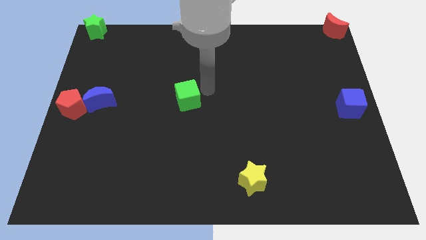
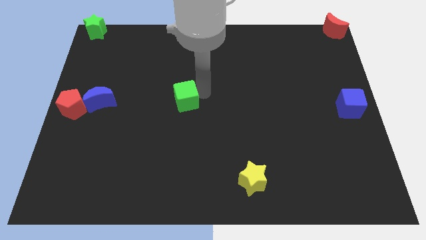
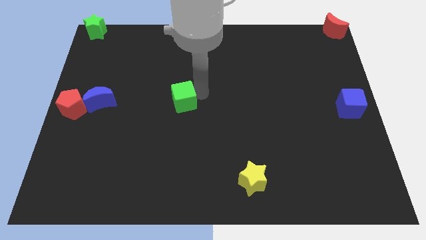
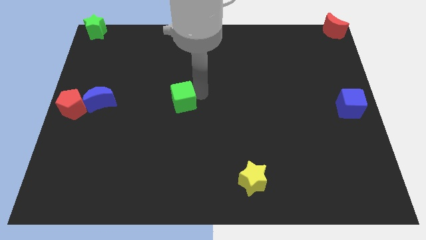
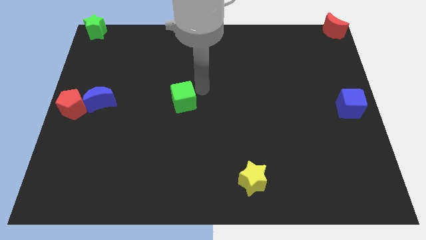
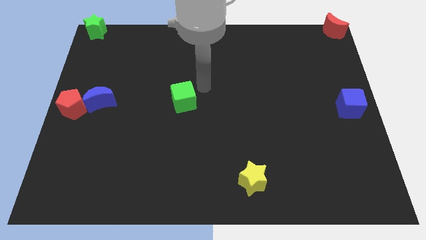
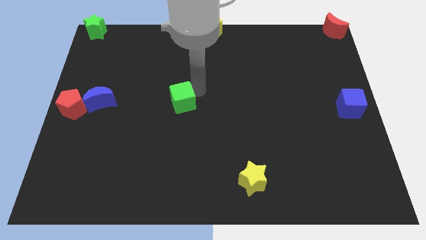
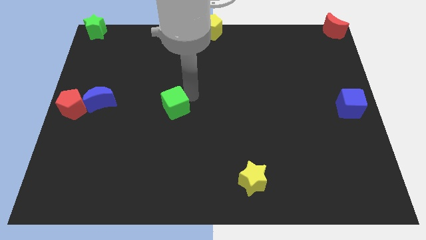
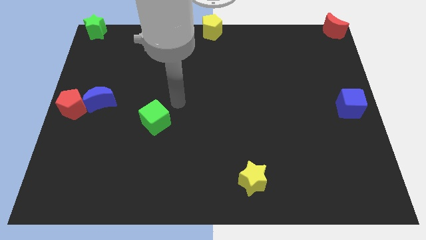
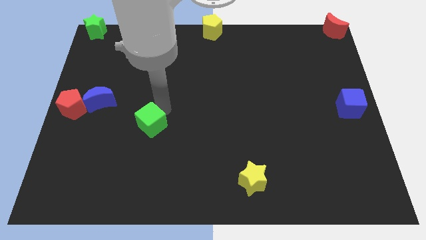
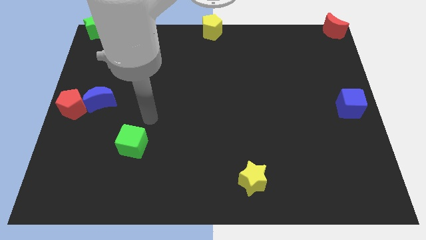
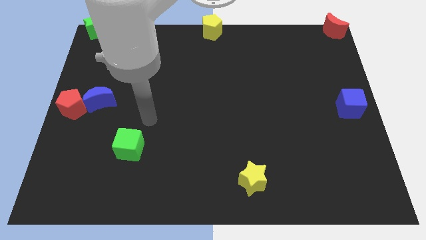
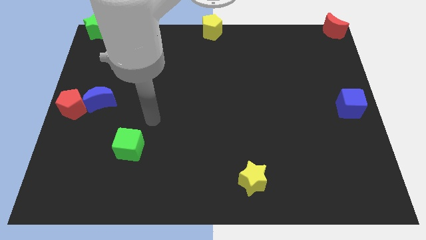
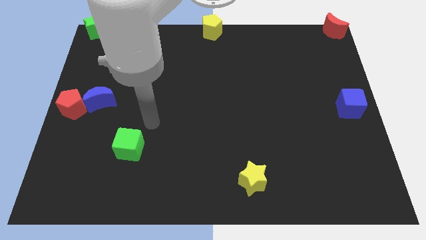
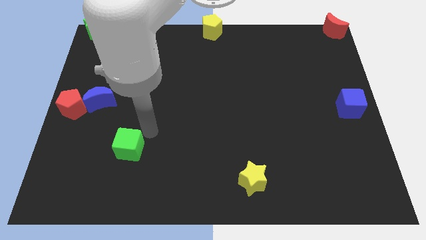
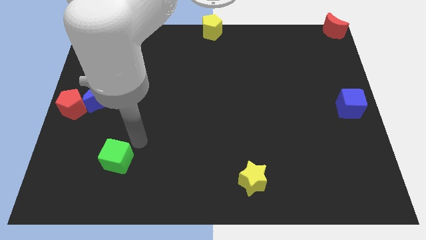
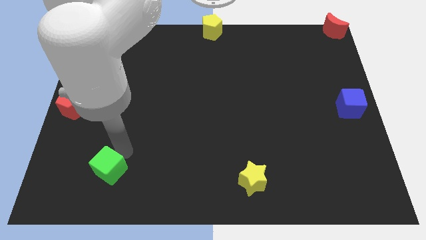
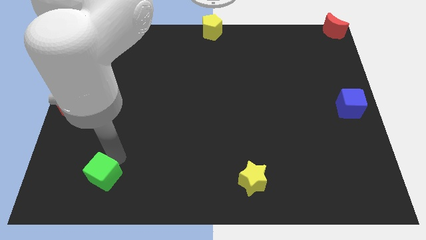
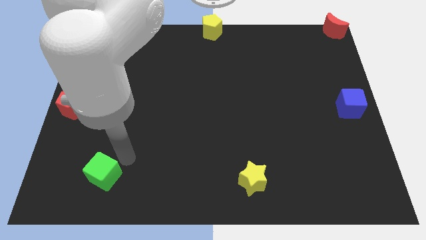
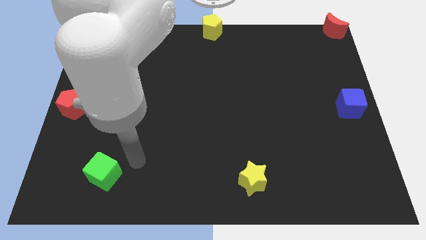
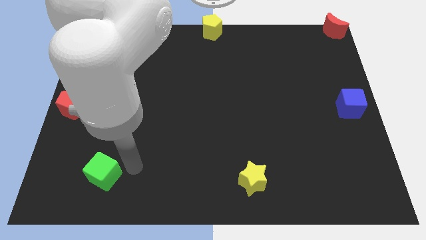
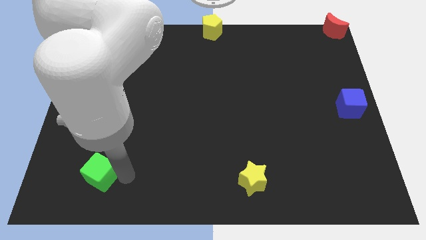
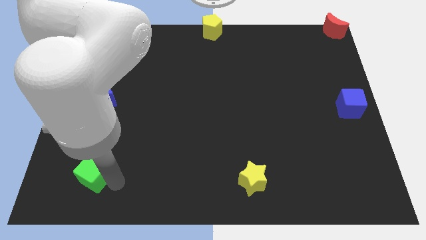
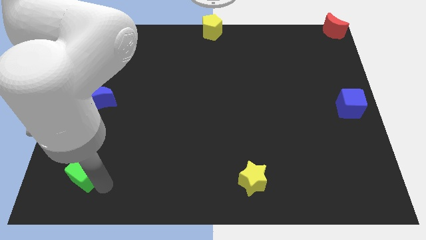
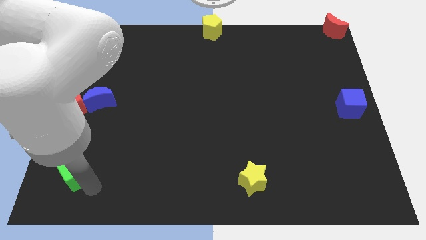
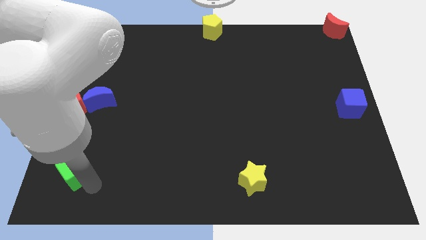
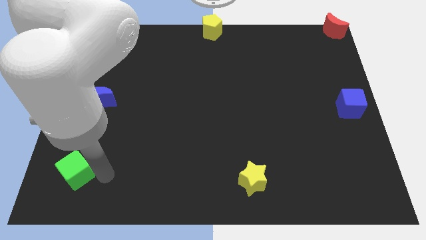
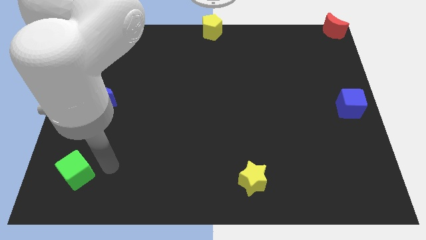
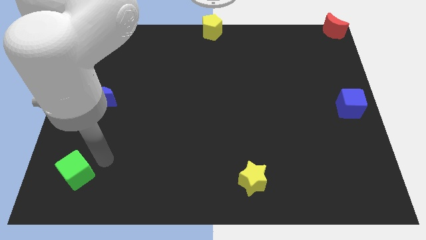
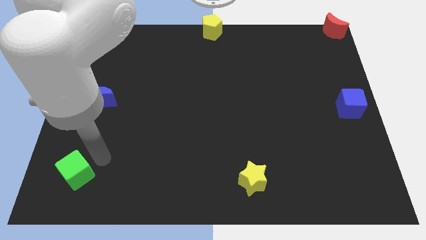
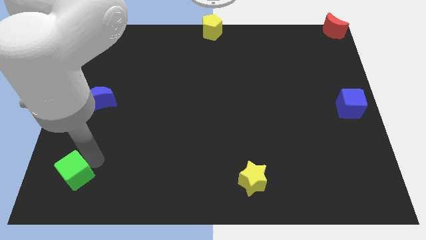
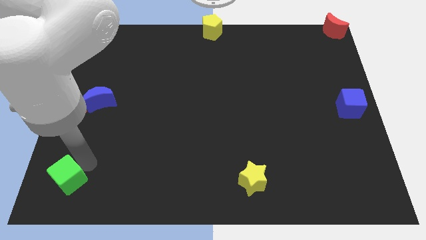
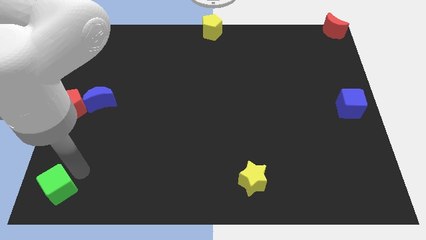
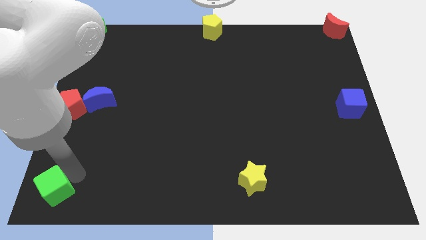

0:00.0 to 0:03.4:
push green cube below red pentagon

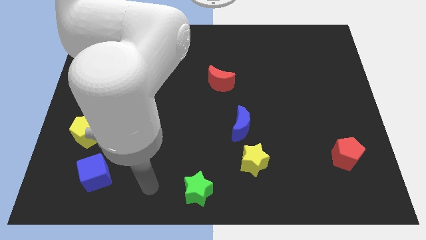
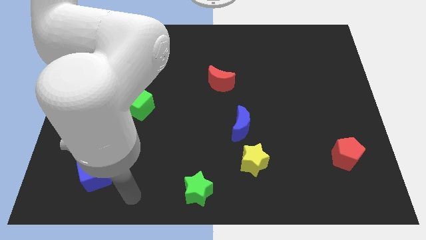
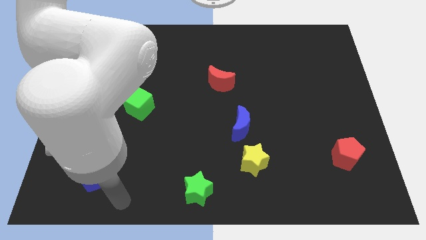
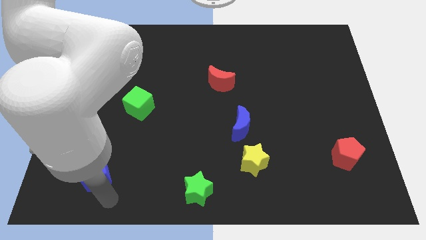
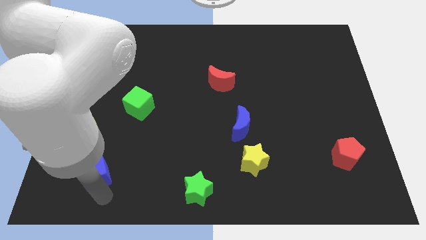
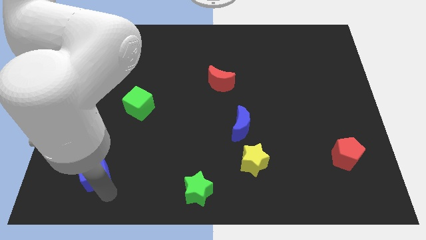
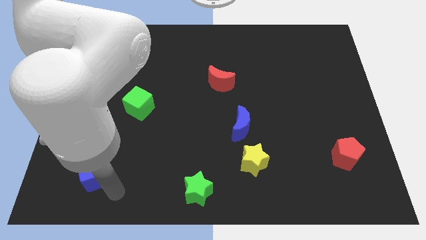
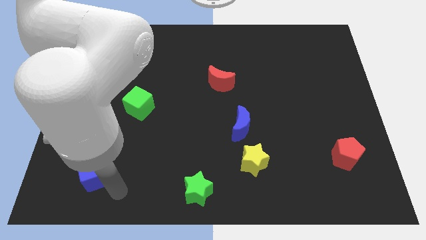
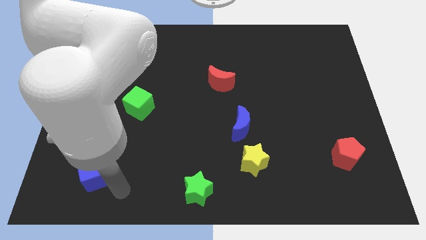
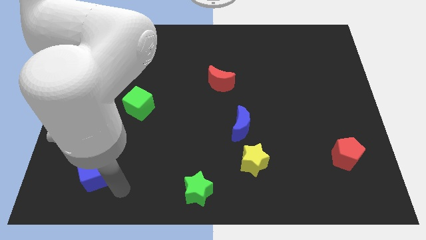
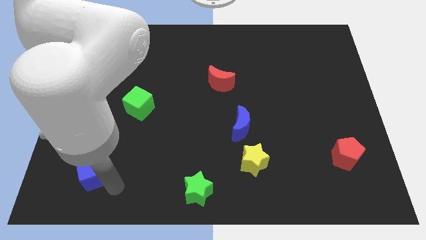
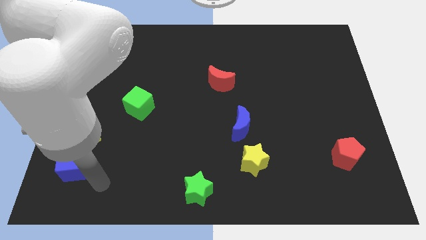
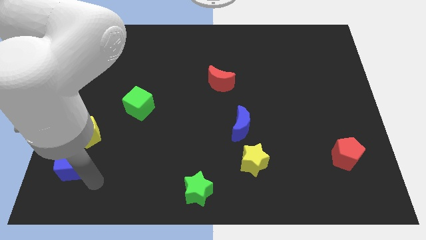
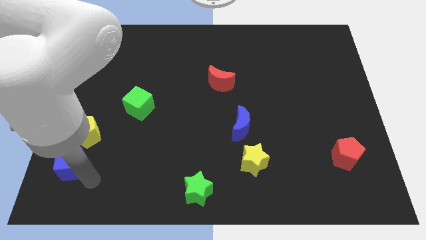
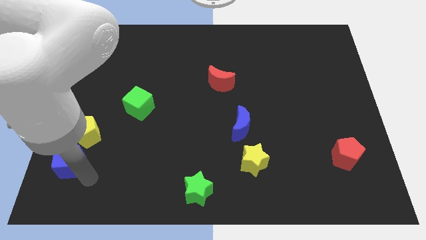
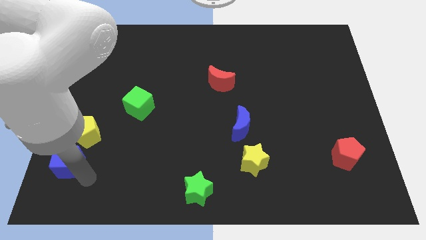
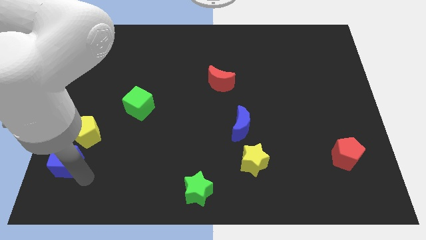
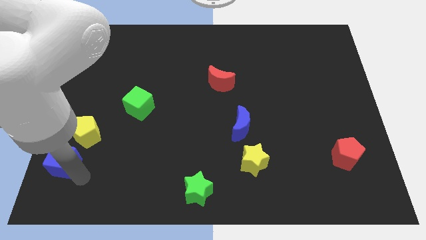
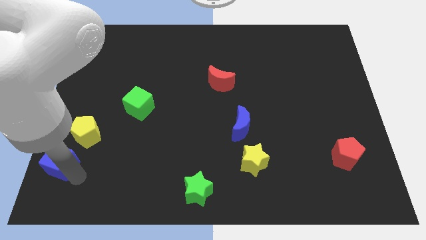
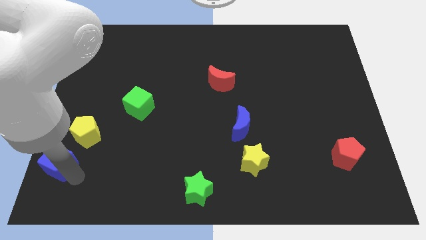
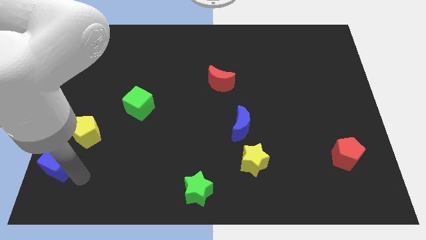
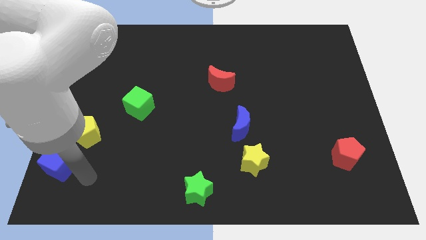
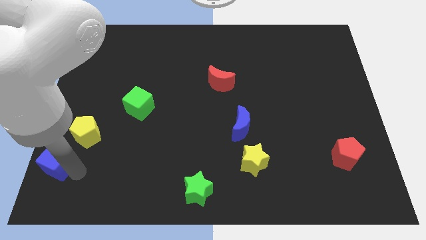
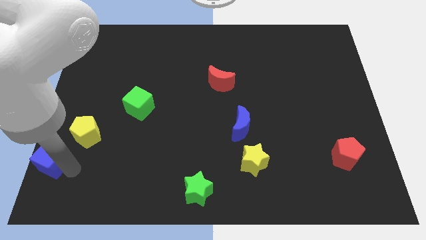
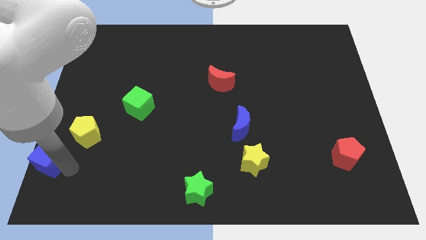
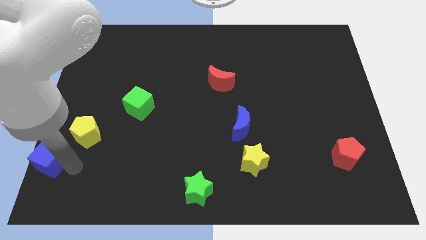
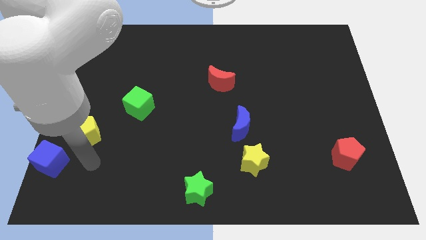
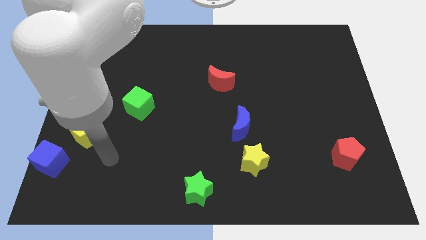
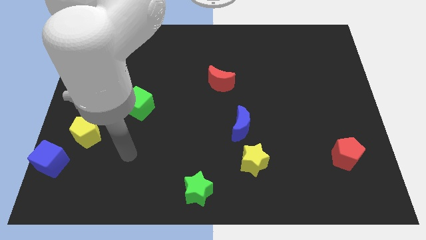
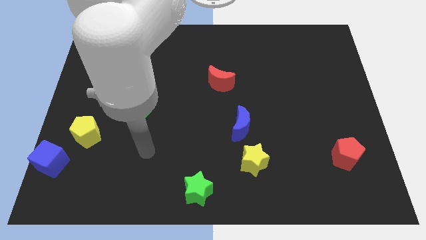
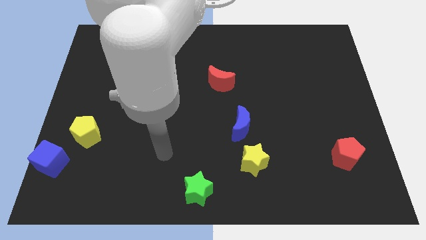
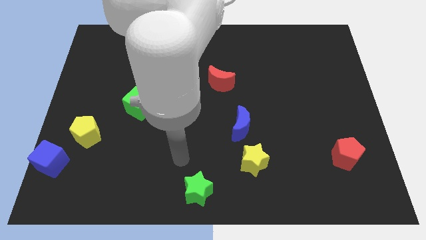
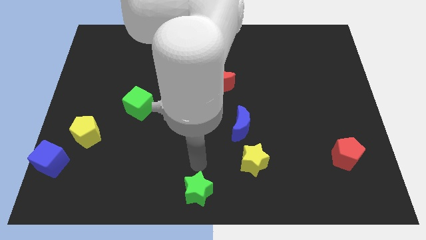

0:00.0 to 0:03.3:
move the blue cube to the left of the board

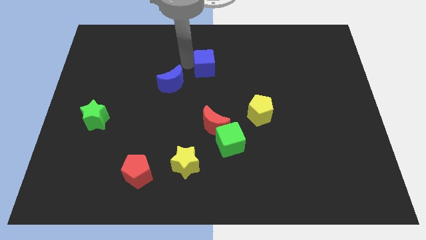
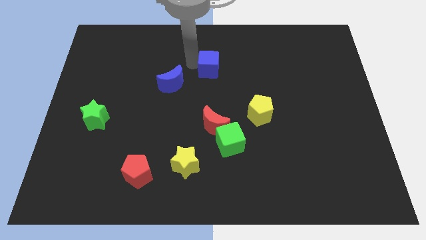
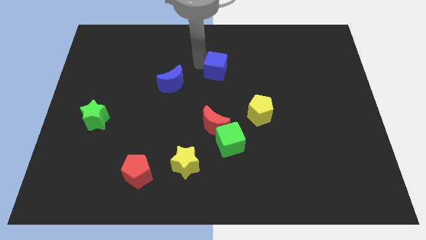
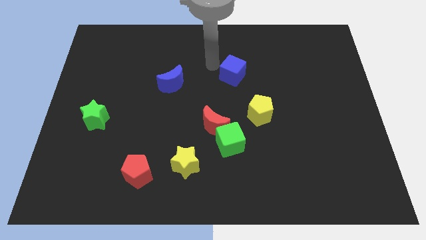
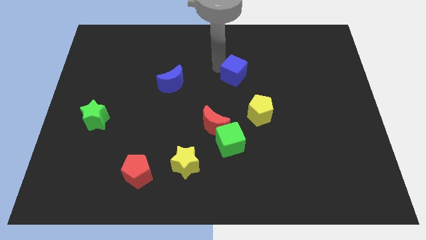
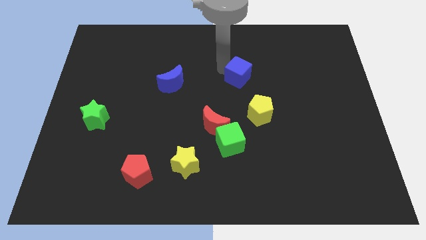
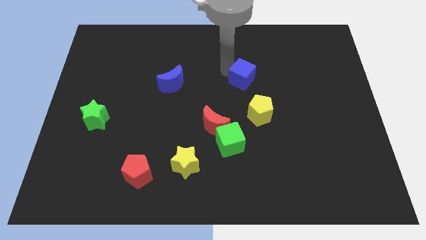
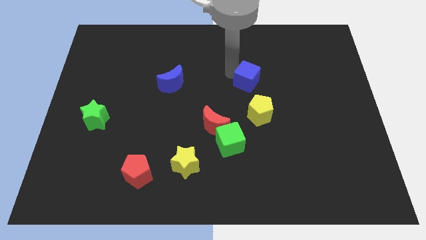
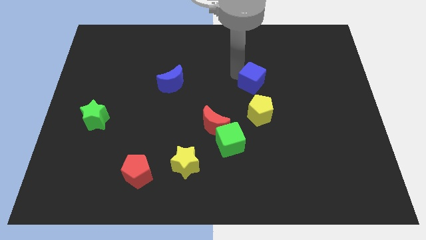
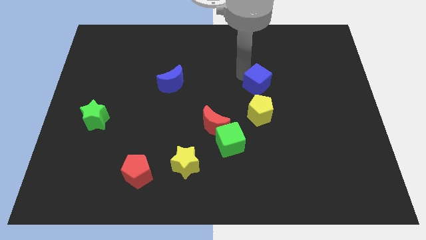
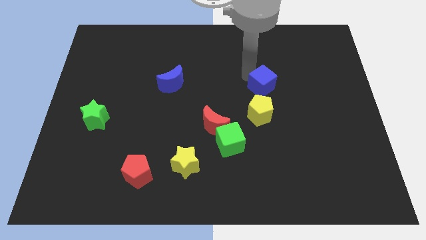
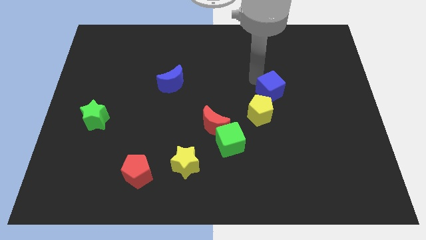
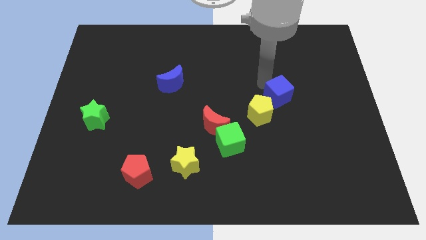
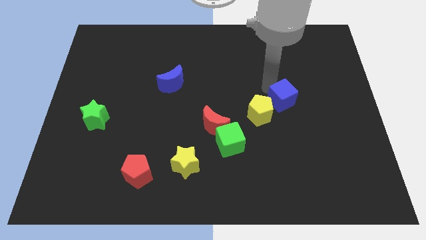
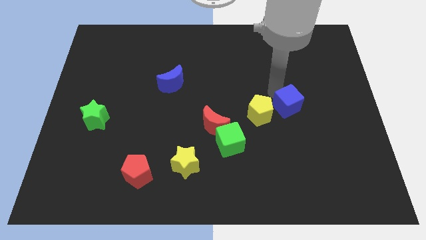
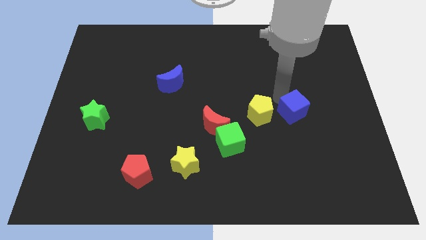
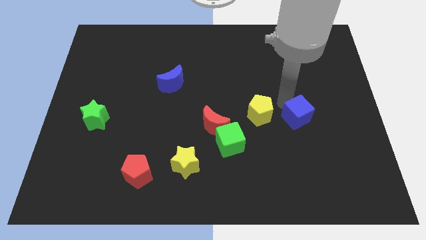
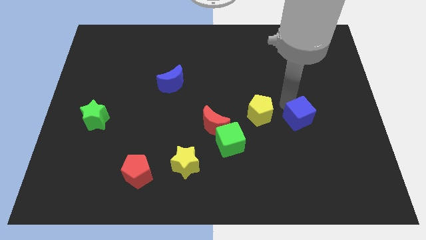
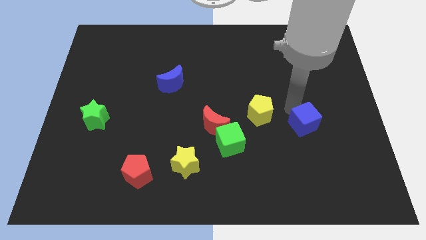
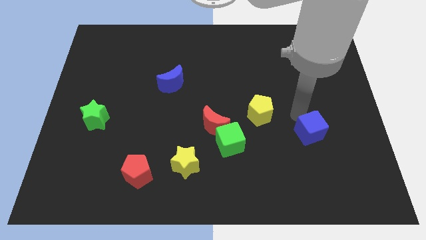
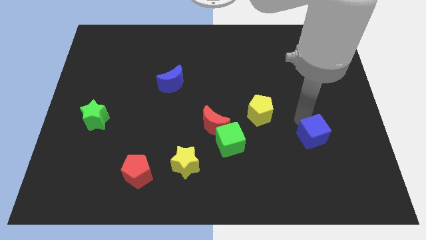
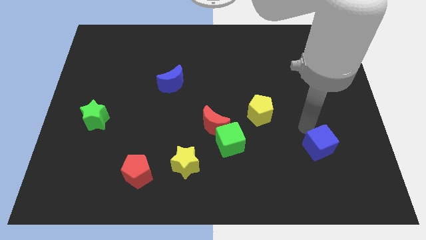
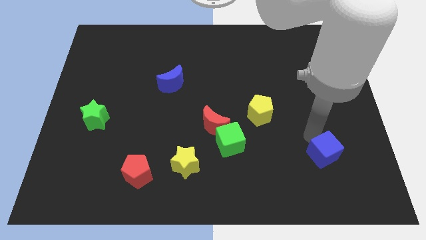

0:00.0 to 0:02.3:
move the blue cube parallel to the green cube
